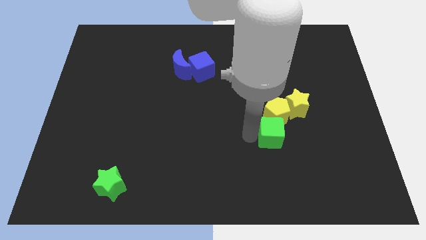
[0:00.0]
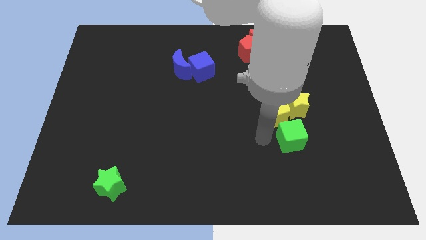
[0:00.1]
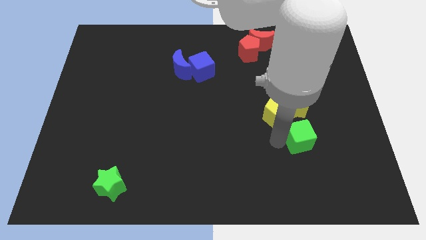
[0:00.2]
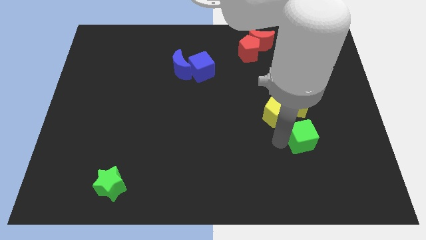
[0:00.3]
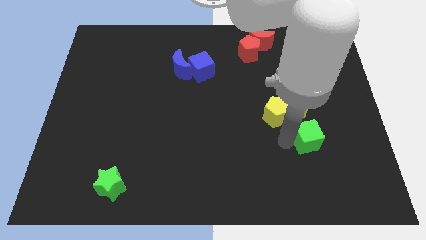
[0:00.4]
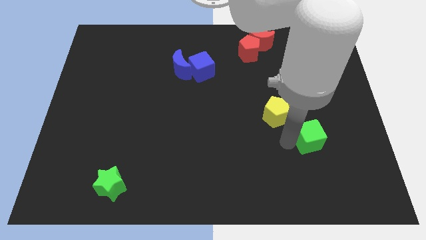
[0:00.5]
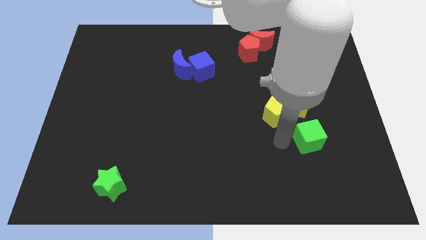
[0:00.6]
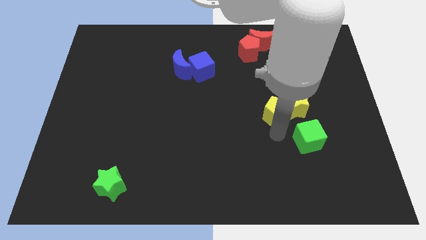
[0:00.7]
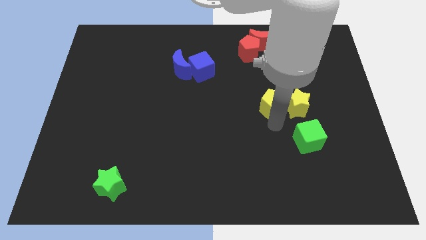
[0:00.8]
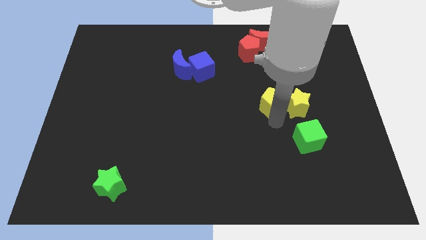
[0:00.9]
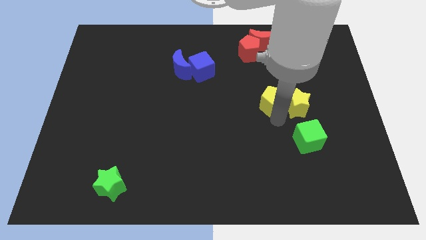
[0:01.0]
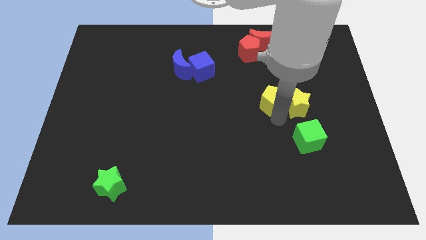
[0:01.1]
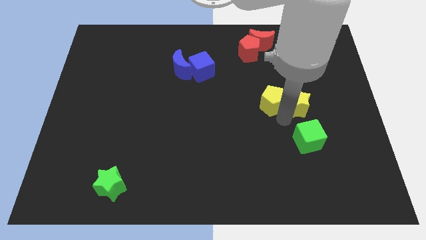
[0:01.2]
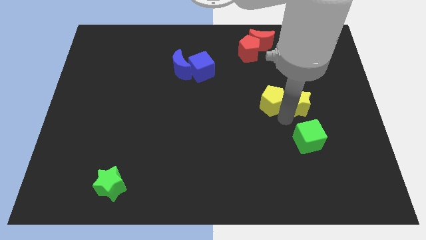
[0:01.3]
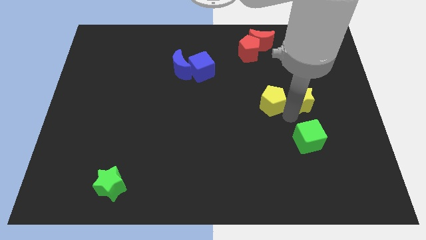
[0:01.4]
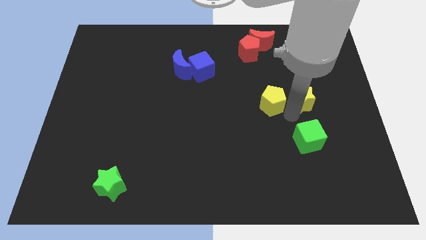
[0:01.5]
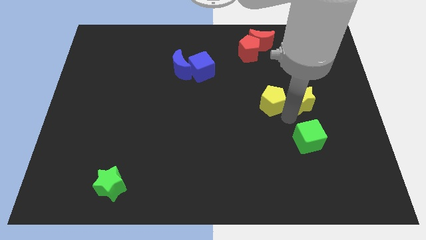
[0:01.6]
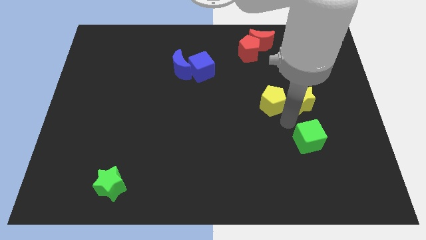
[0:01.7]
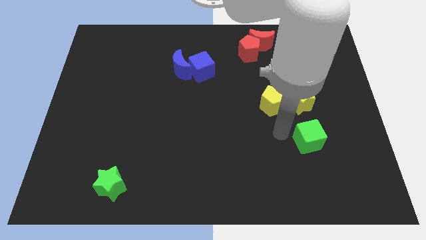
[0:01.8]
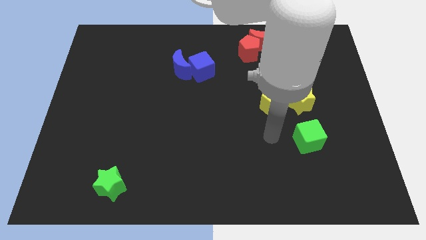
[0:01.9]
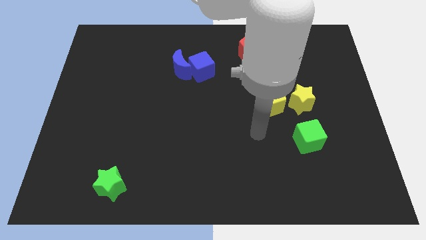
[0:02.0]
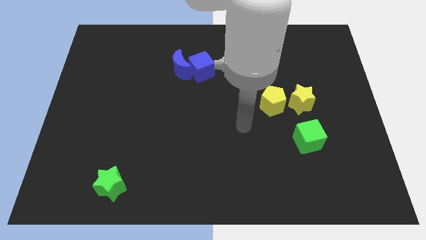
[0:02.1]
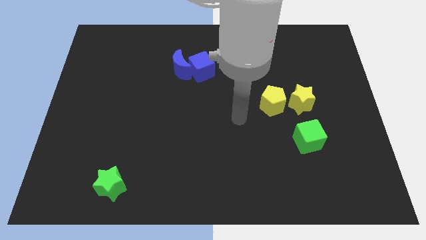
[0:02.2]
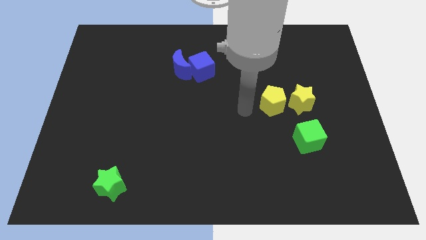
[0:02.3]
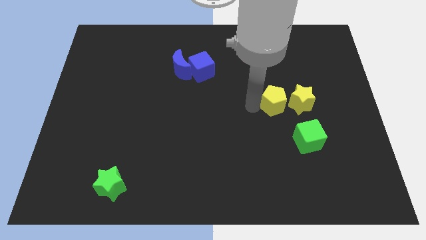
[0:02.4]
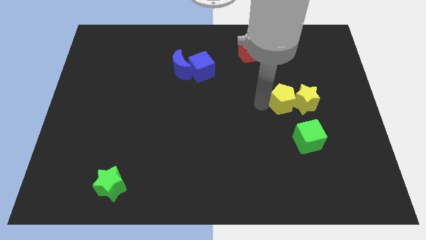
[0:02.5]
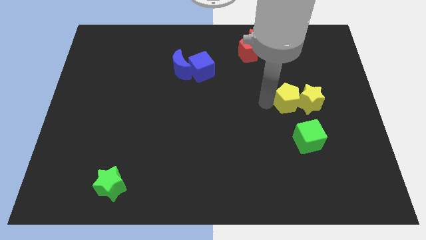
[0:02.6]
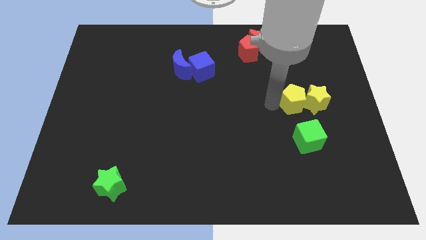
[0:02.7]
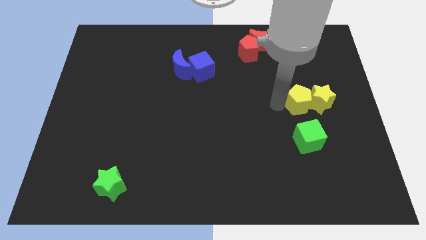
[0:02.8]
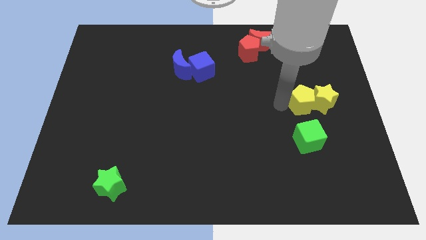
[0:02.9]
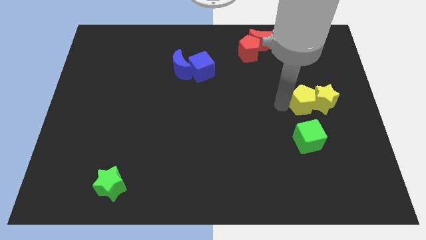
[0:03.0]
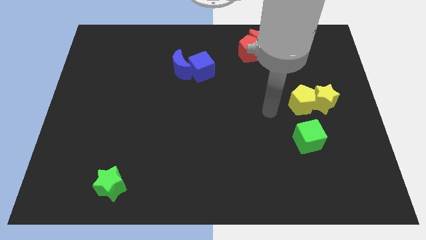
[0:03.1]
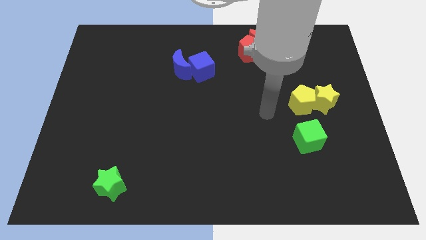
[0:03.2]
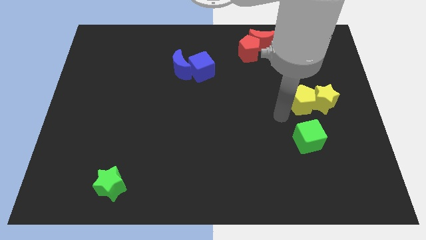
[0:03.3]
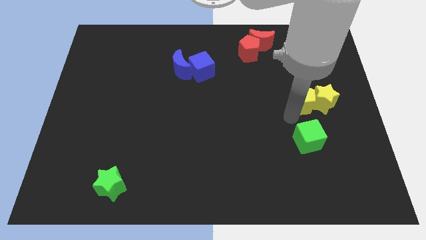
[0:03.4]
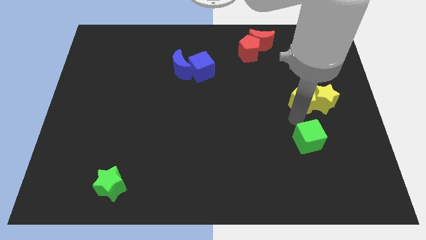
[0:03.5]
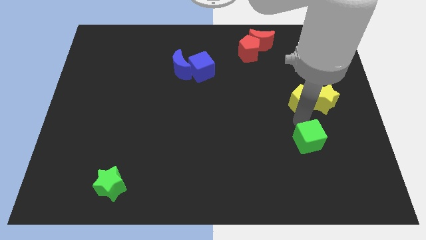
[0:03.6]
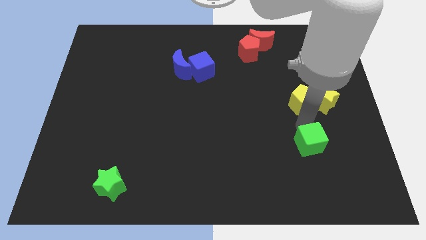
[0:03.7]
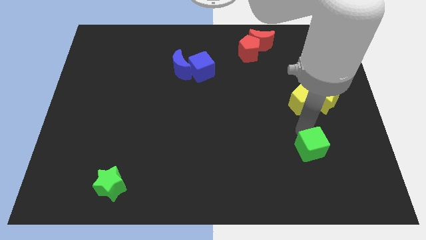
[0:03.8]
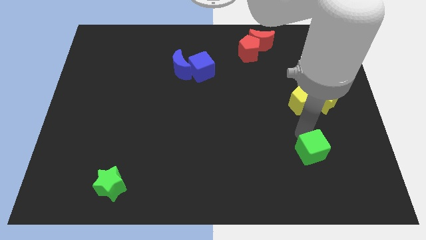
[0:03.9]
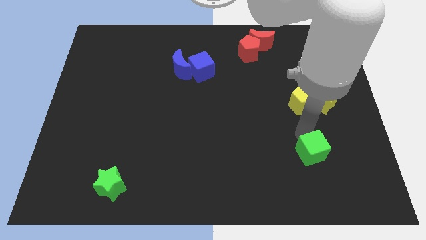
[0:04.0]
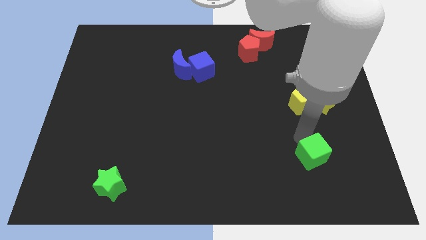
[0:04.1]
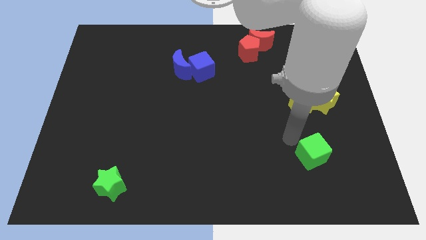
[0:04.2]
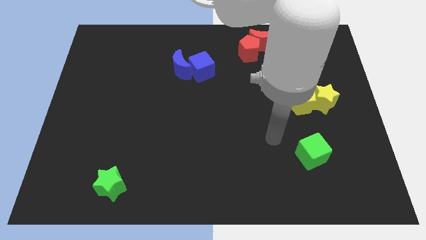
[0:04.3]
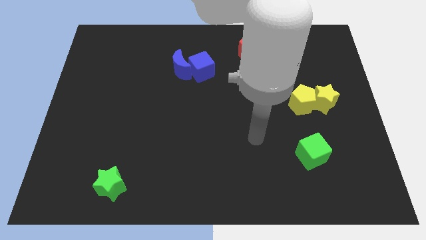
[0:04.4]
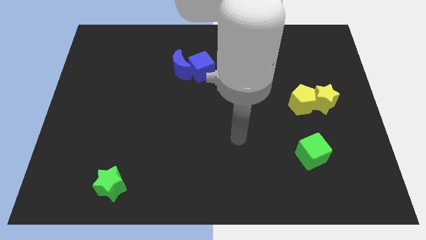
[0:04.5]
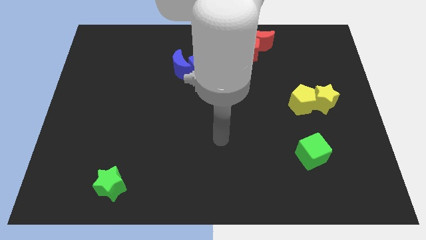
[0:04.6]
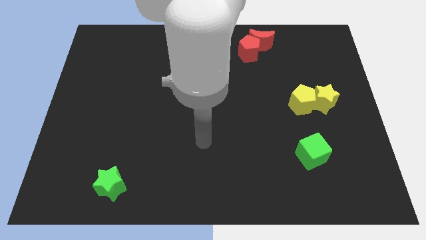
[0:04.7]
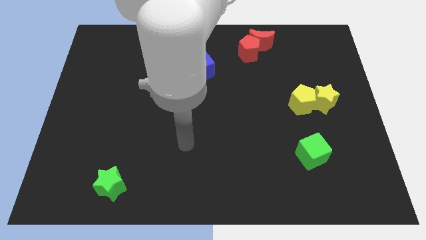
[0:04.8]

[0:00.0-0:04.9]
separate the green cube from the yellow blocks

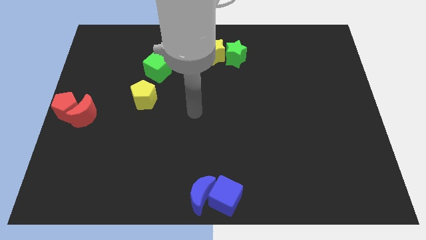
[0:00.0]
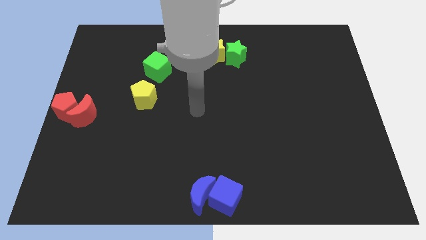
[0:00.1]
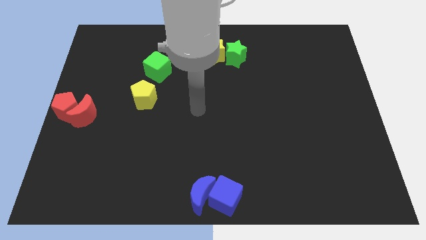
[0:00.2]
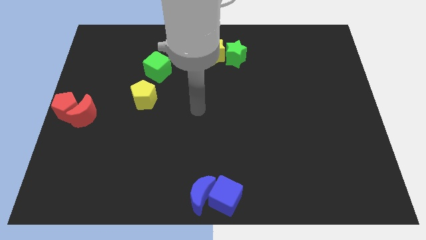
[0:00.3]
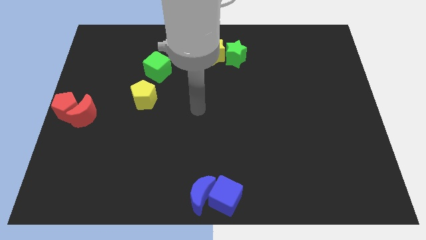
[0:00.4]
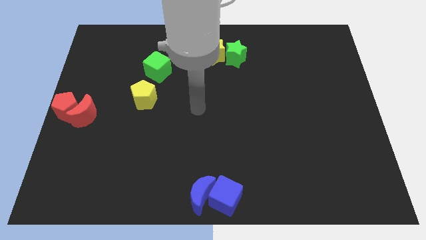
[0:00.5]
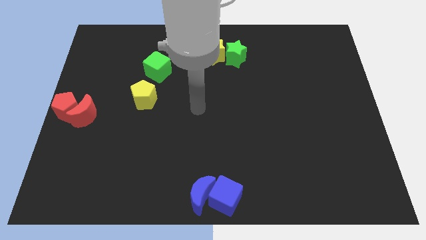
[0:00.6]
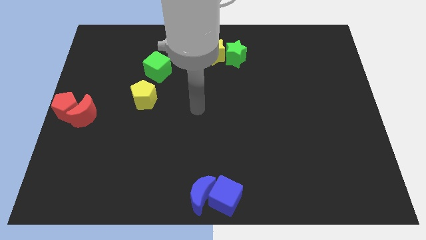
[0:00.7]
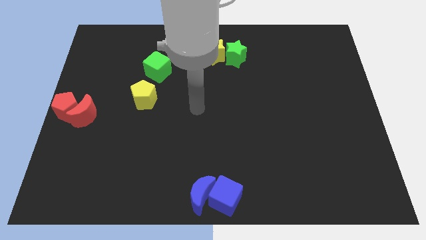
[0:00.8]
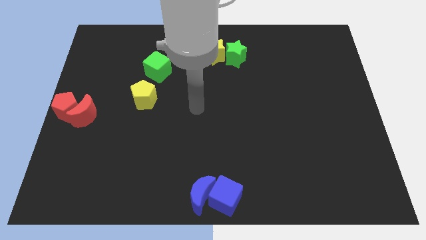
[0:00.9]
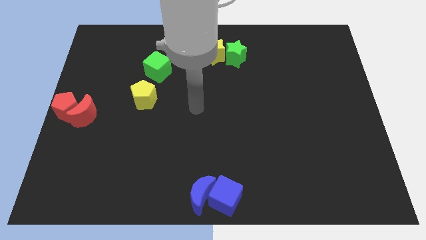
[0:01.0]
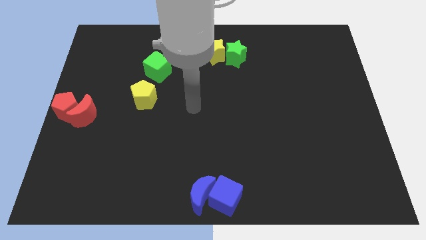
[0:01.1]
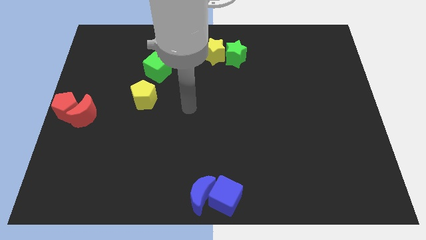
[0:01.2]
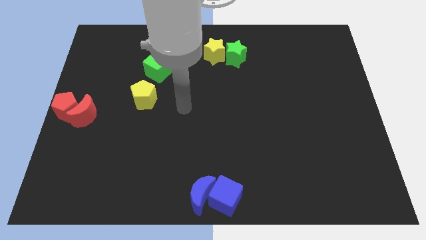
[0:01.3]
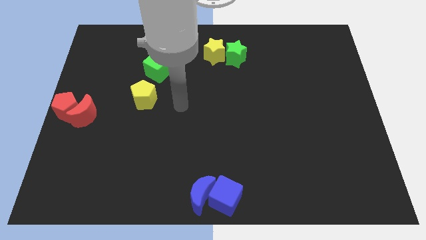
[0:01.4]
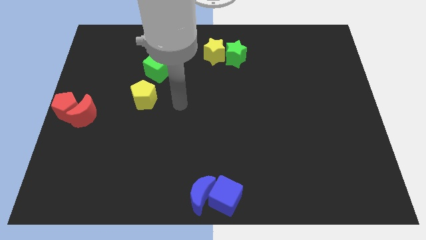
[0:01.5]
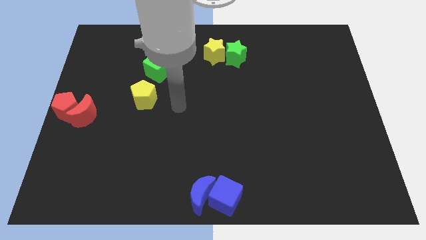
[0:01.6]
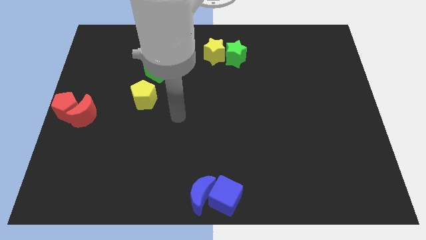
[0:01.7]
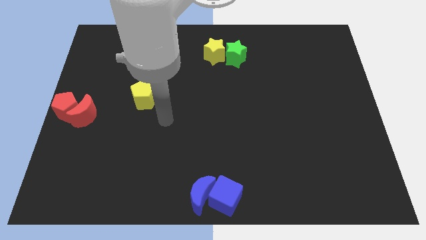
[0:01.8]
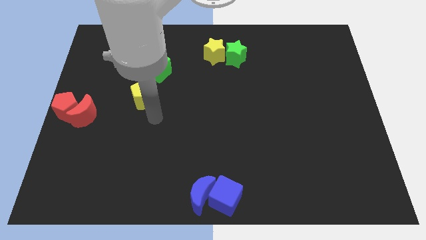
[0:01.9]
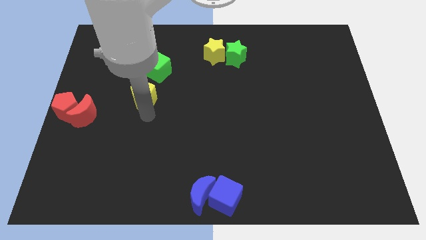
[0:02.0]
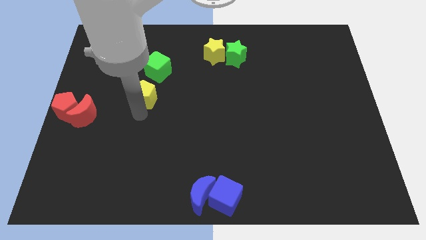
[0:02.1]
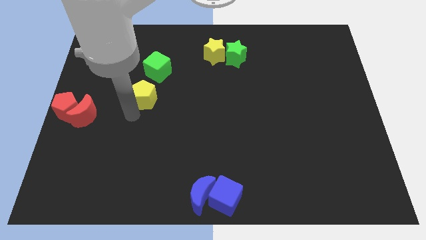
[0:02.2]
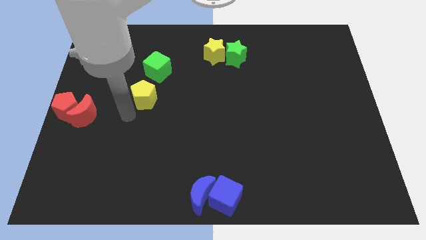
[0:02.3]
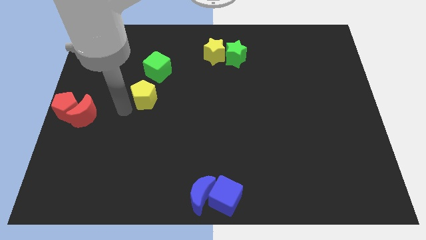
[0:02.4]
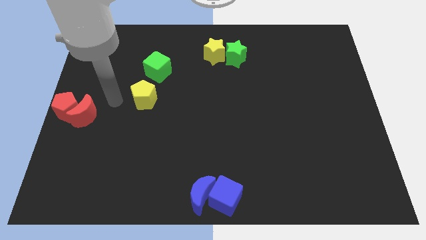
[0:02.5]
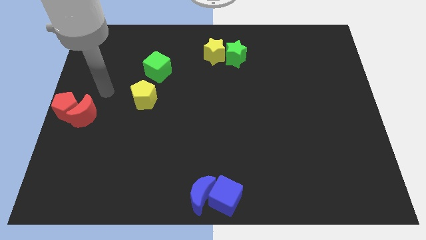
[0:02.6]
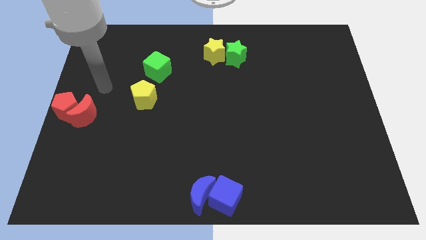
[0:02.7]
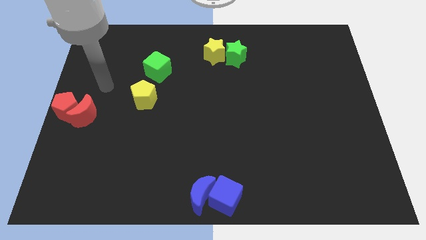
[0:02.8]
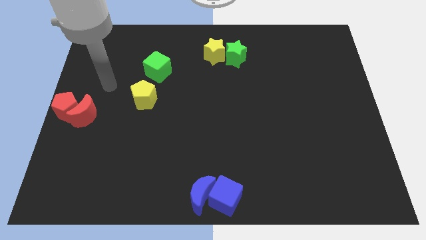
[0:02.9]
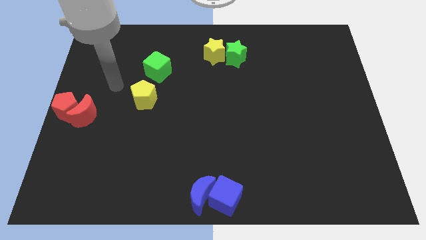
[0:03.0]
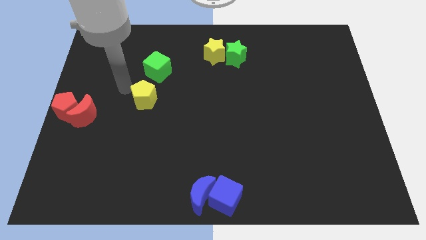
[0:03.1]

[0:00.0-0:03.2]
place your arm to the left of yellow pentagon

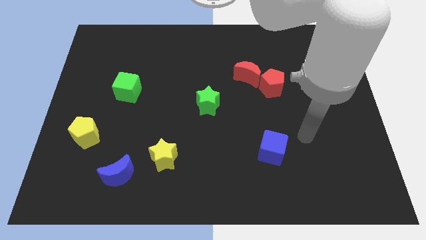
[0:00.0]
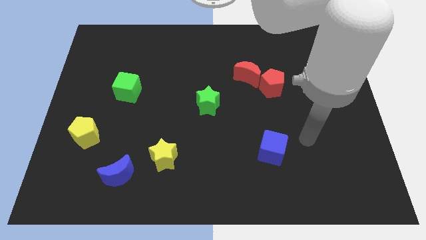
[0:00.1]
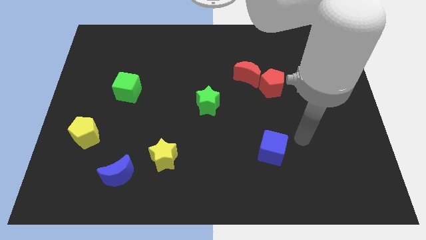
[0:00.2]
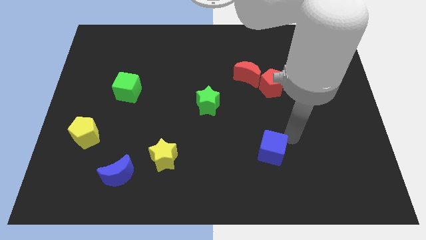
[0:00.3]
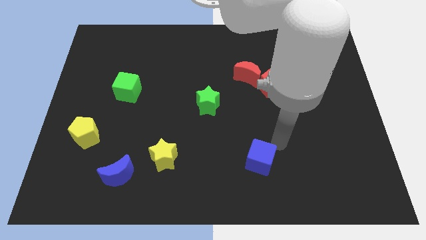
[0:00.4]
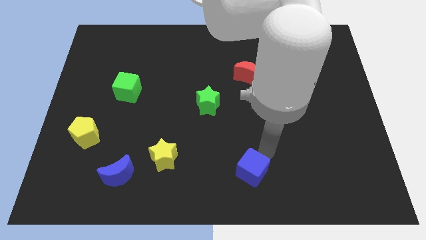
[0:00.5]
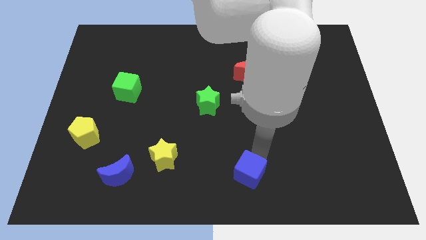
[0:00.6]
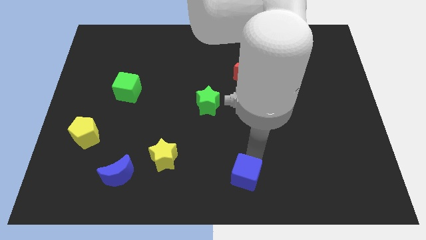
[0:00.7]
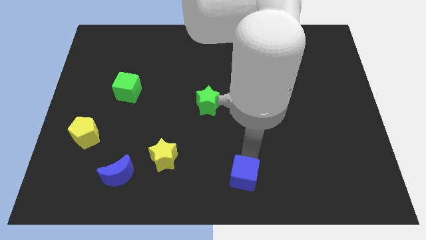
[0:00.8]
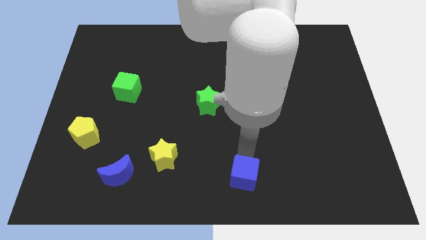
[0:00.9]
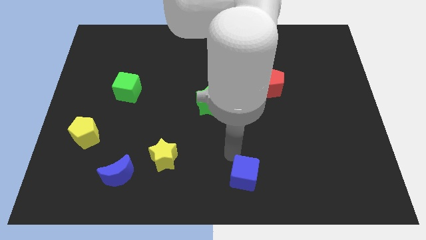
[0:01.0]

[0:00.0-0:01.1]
push the blue cube towards the bottom
